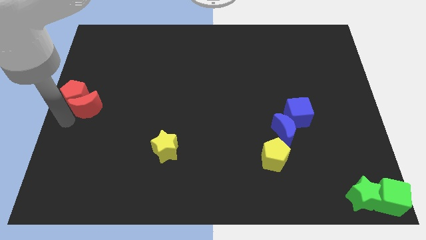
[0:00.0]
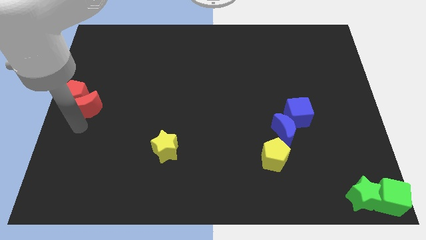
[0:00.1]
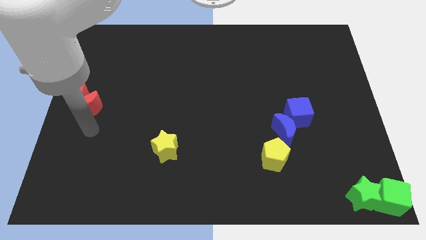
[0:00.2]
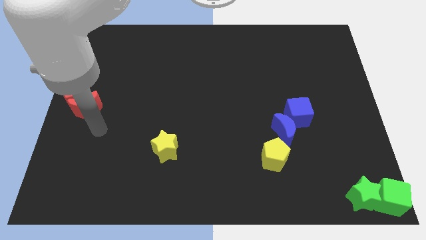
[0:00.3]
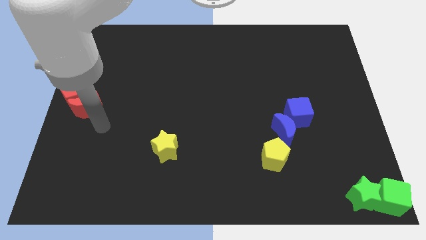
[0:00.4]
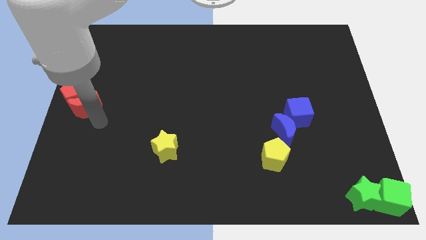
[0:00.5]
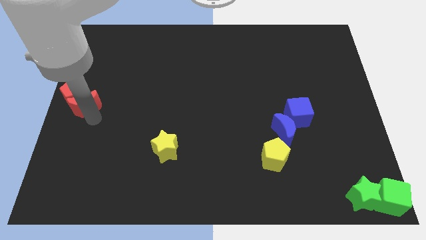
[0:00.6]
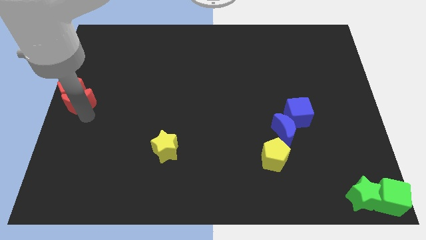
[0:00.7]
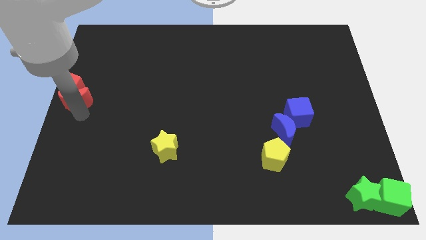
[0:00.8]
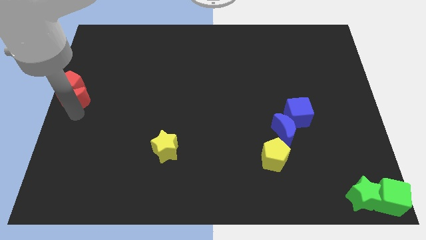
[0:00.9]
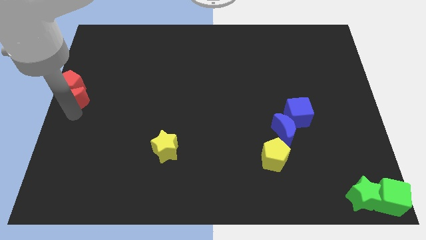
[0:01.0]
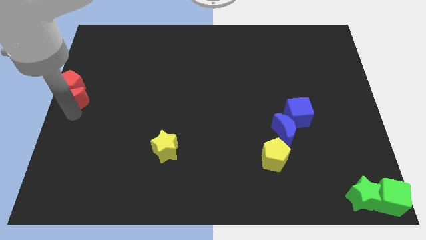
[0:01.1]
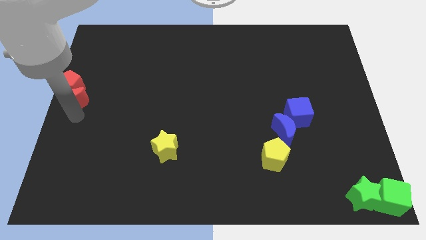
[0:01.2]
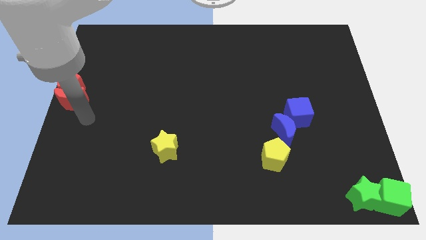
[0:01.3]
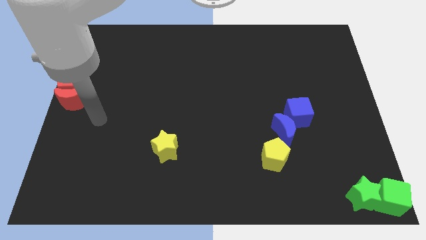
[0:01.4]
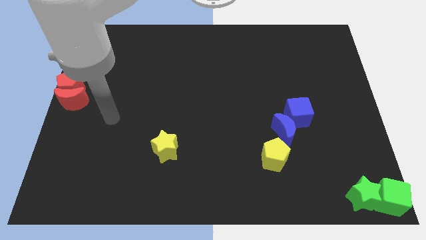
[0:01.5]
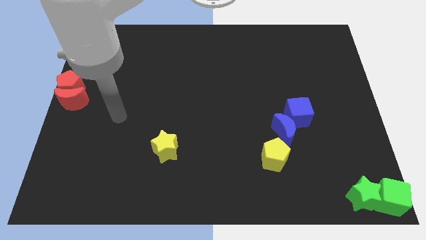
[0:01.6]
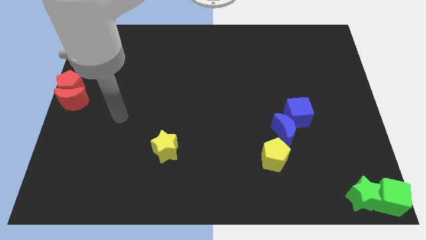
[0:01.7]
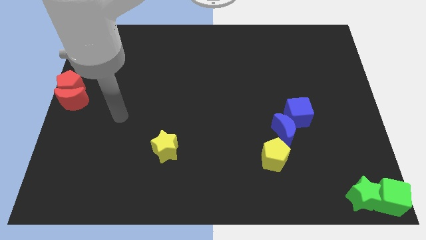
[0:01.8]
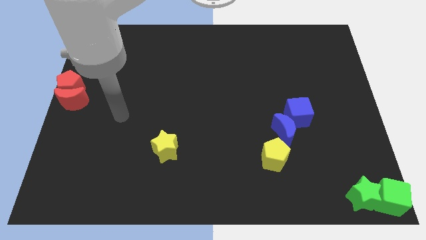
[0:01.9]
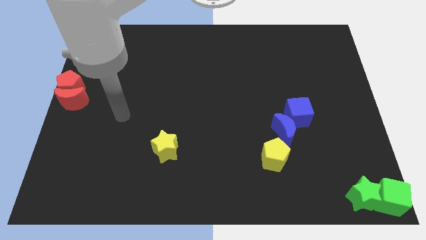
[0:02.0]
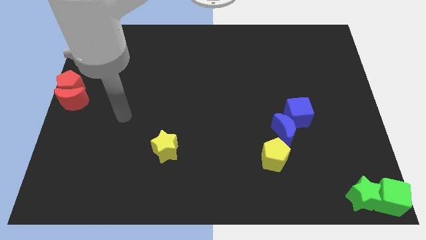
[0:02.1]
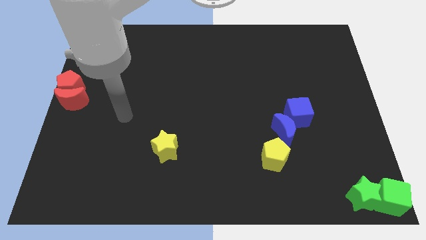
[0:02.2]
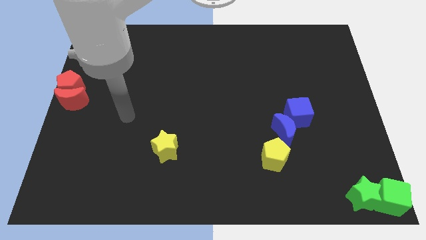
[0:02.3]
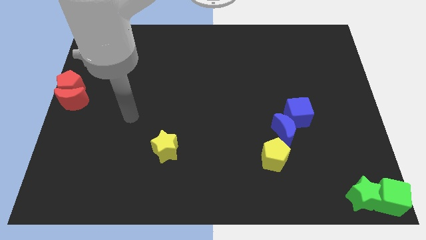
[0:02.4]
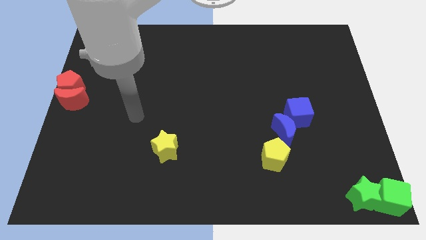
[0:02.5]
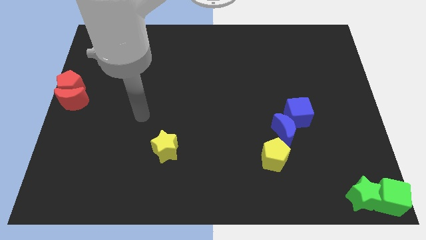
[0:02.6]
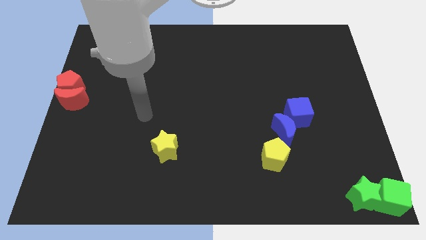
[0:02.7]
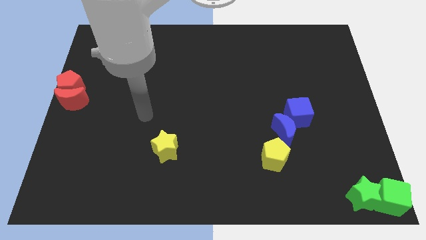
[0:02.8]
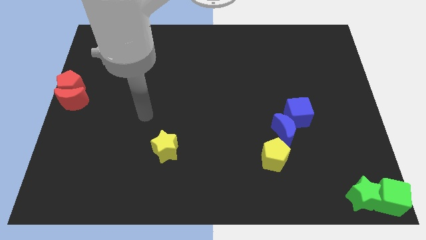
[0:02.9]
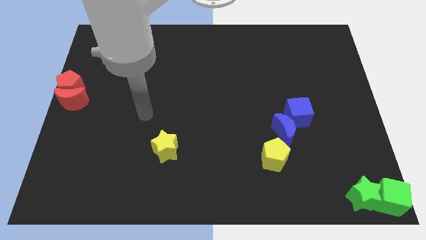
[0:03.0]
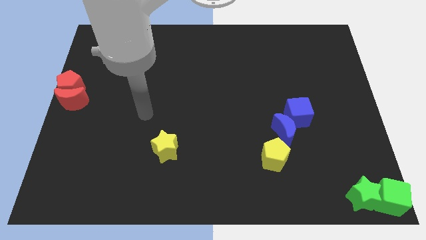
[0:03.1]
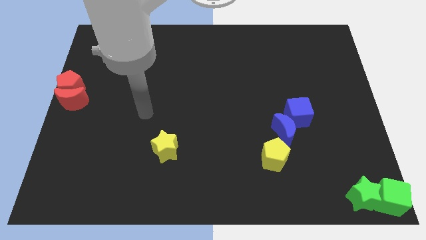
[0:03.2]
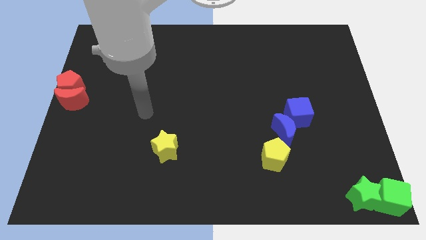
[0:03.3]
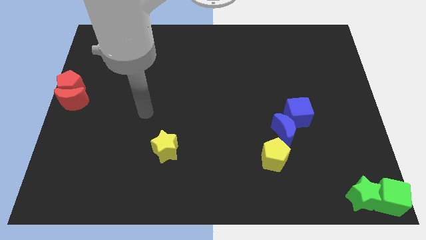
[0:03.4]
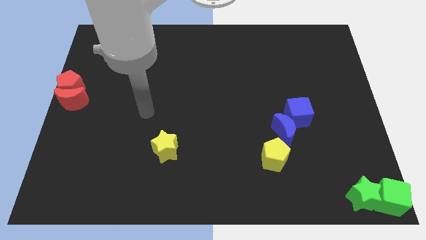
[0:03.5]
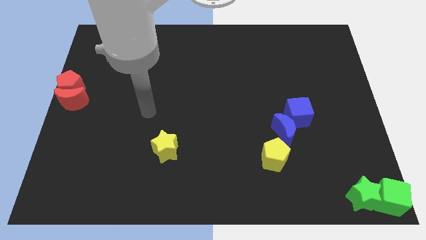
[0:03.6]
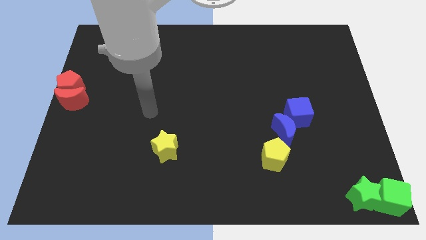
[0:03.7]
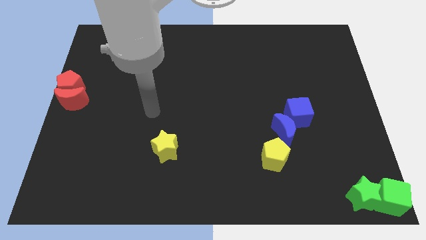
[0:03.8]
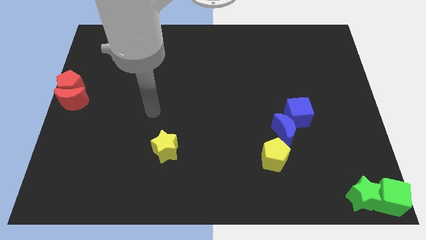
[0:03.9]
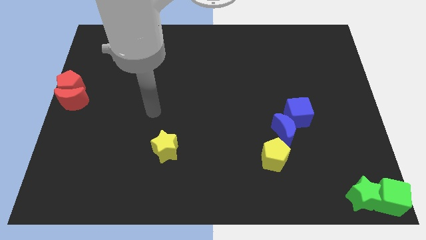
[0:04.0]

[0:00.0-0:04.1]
place both red pentagon and red crescent to the left center of the board

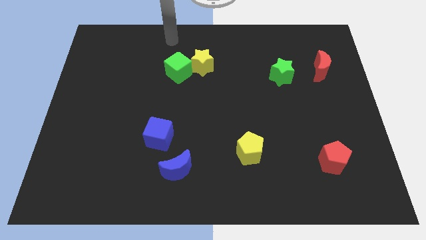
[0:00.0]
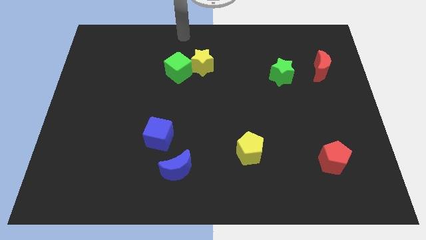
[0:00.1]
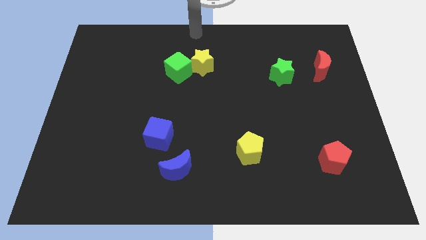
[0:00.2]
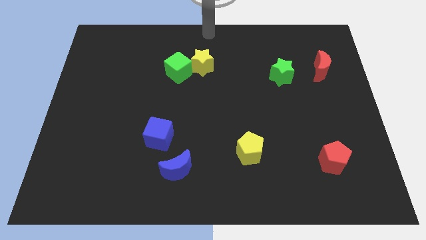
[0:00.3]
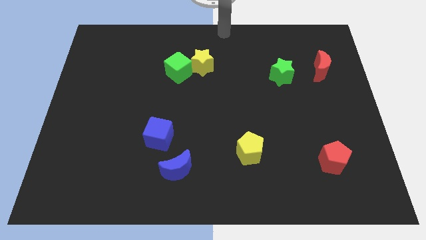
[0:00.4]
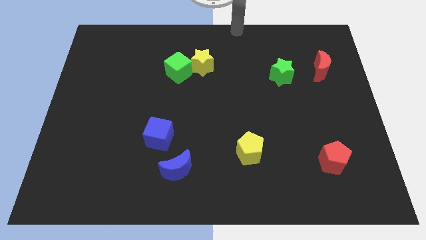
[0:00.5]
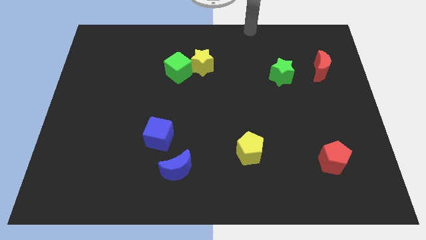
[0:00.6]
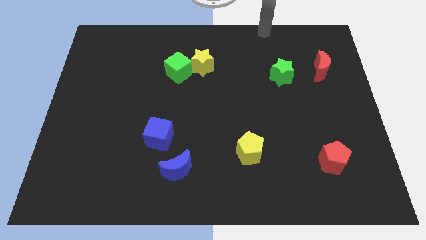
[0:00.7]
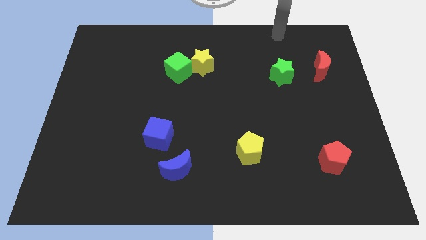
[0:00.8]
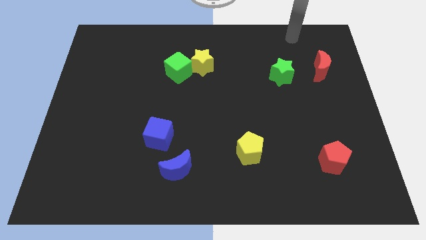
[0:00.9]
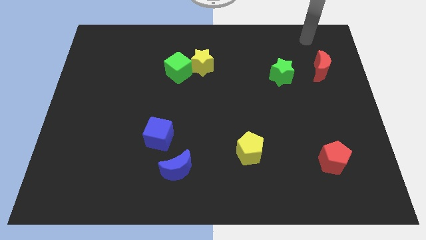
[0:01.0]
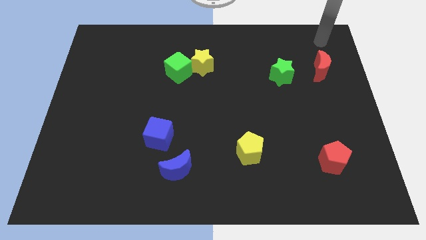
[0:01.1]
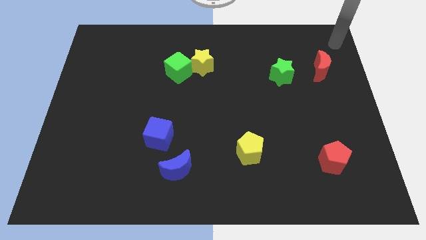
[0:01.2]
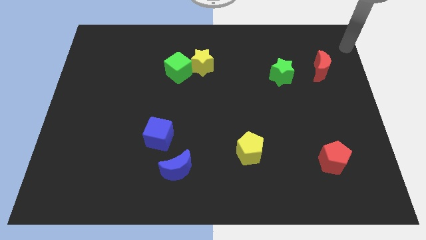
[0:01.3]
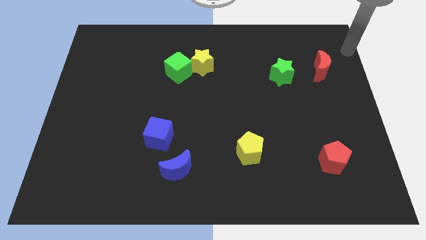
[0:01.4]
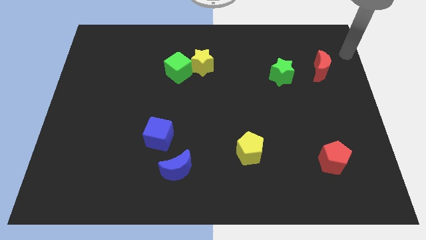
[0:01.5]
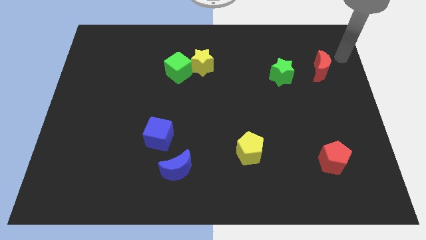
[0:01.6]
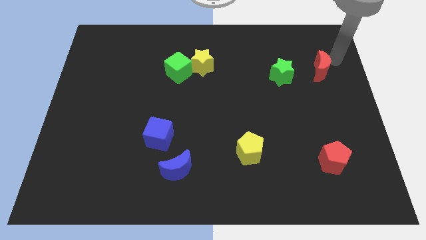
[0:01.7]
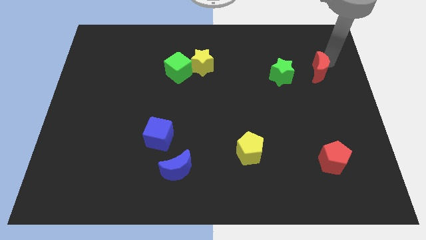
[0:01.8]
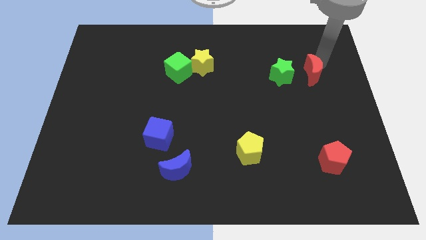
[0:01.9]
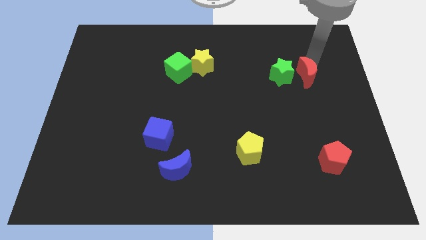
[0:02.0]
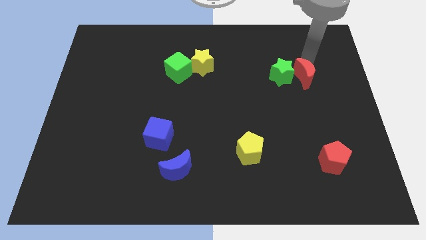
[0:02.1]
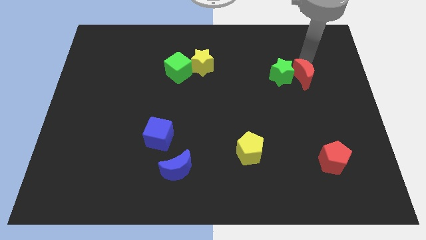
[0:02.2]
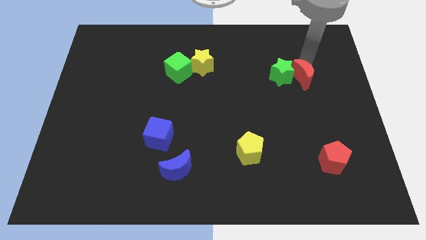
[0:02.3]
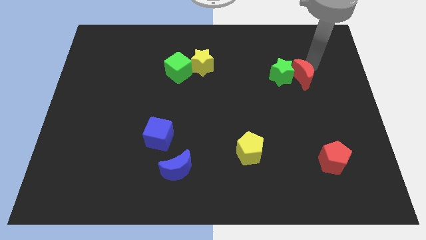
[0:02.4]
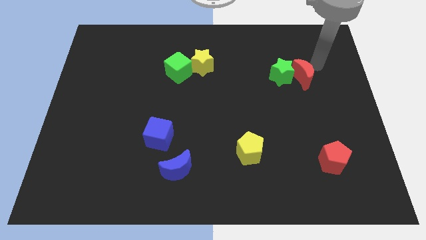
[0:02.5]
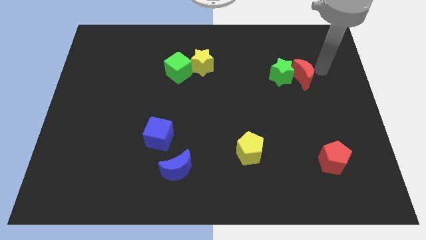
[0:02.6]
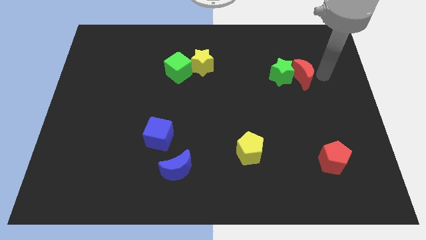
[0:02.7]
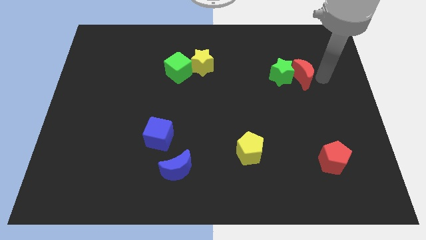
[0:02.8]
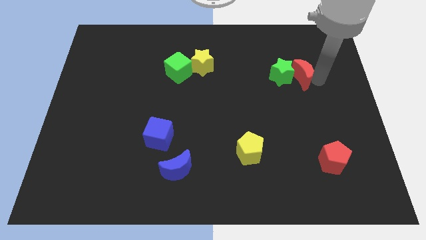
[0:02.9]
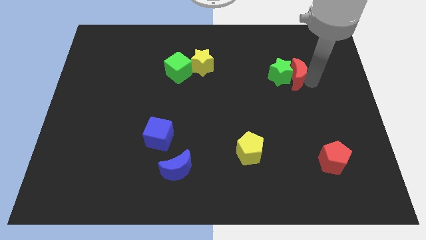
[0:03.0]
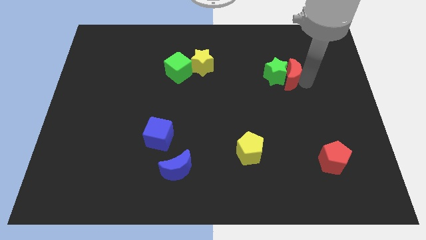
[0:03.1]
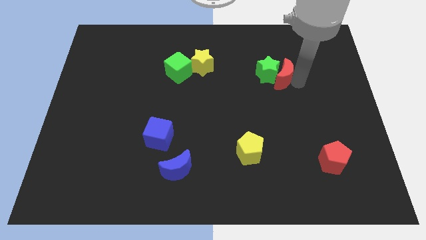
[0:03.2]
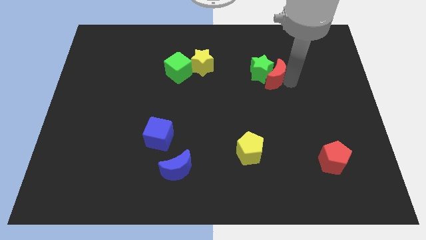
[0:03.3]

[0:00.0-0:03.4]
push the red crescent into the green star

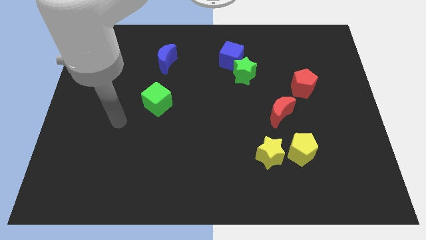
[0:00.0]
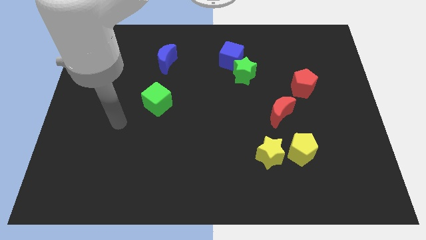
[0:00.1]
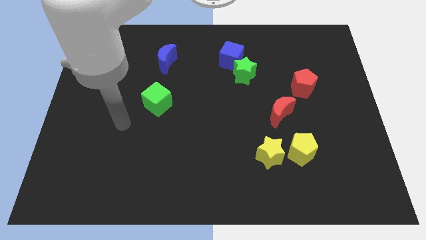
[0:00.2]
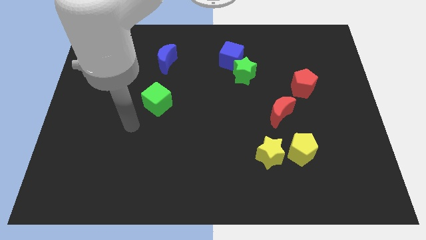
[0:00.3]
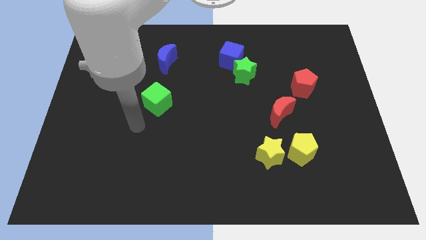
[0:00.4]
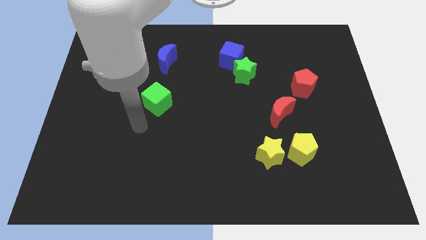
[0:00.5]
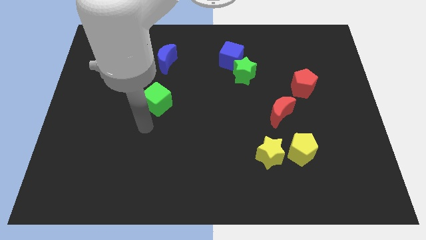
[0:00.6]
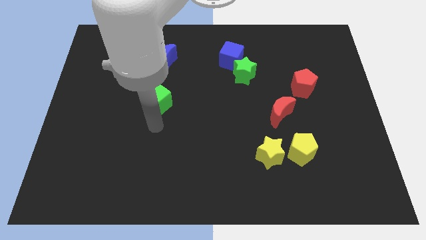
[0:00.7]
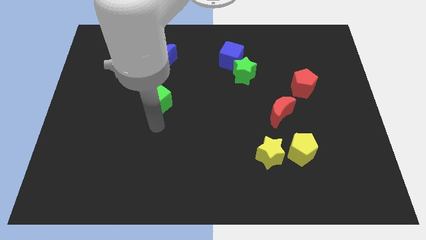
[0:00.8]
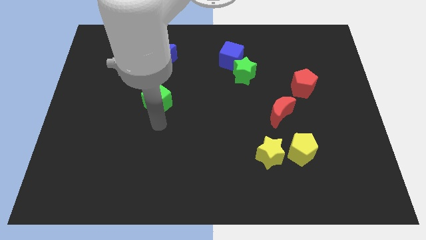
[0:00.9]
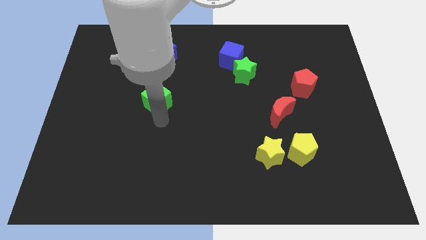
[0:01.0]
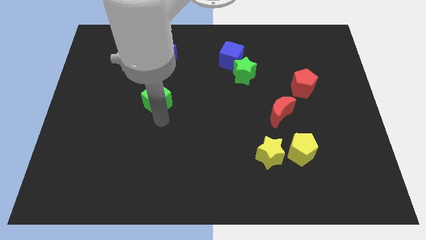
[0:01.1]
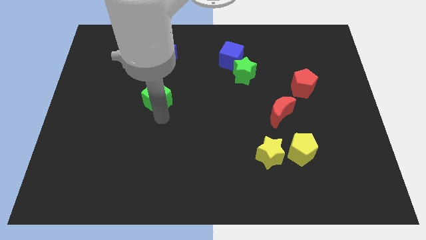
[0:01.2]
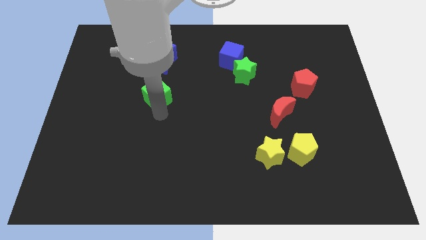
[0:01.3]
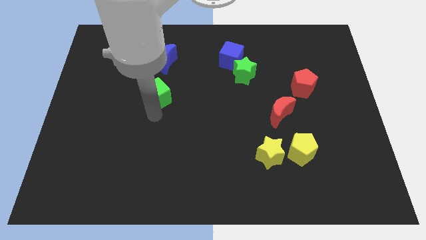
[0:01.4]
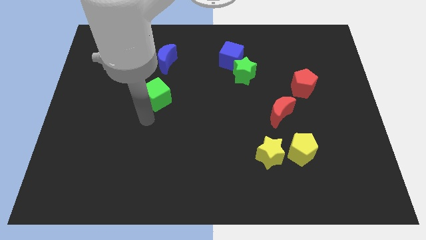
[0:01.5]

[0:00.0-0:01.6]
move the green cube slightly upwards
